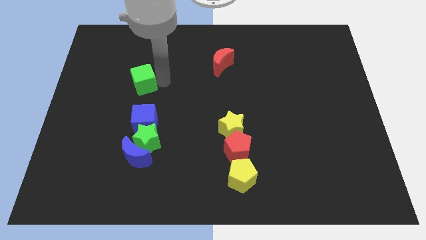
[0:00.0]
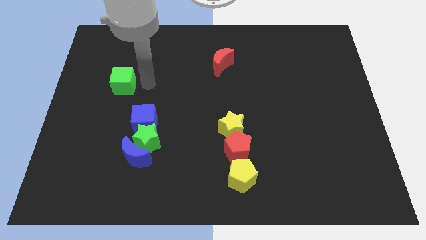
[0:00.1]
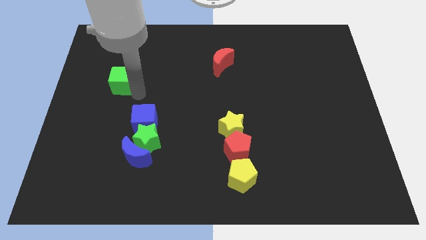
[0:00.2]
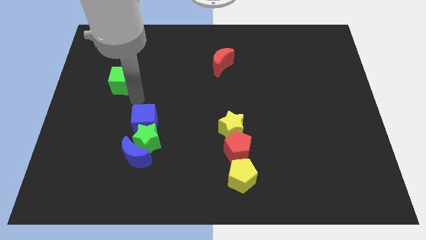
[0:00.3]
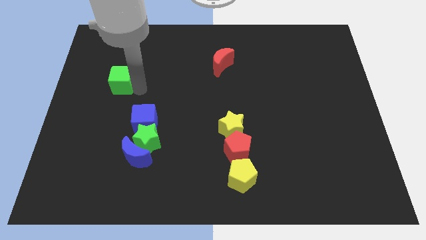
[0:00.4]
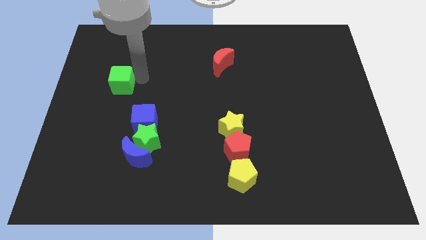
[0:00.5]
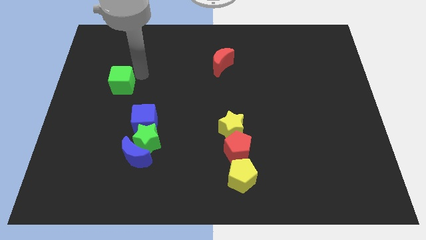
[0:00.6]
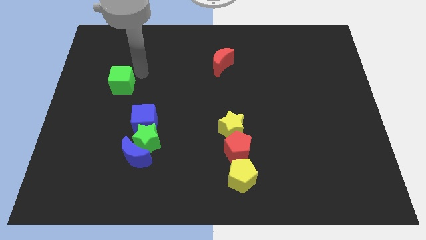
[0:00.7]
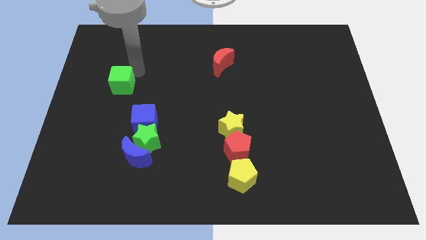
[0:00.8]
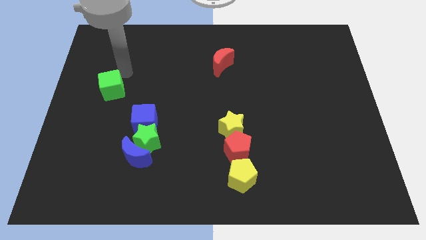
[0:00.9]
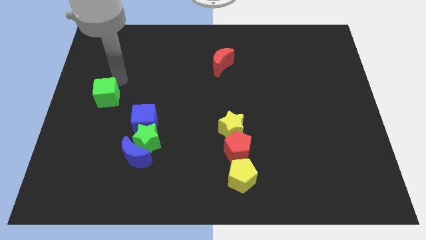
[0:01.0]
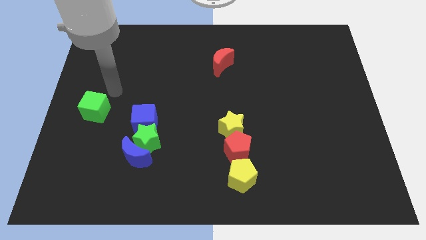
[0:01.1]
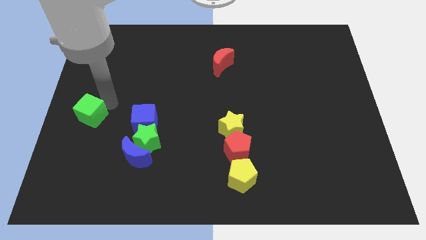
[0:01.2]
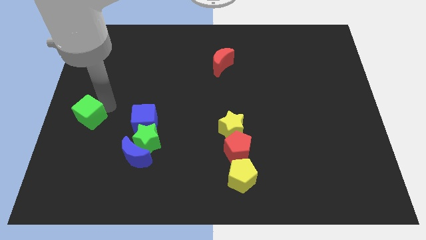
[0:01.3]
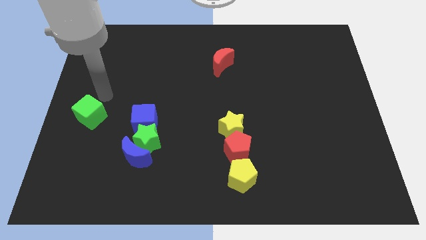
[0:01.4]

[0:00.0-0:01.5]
push the green cube to the center left of the board

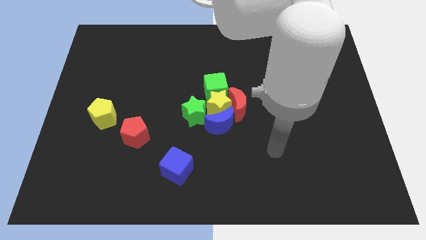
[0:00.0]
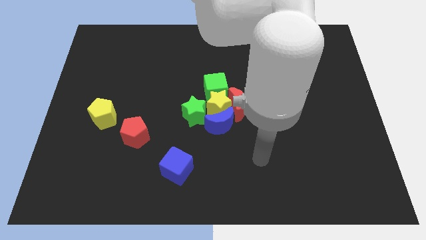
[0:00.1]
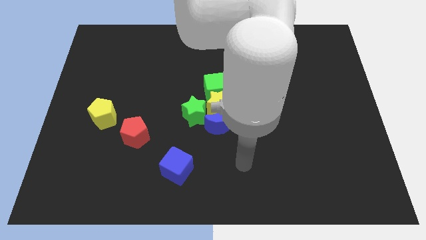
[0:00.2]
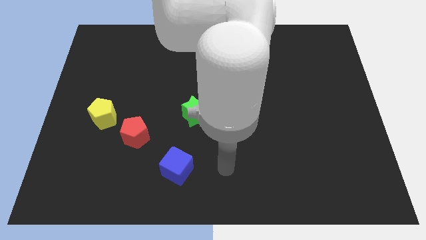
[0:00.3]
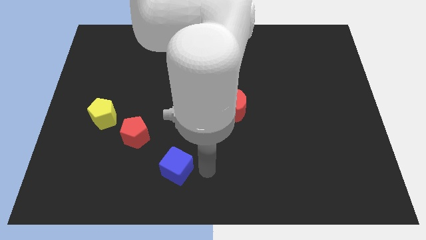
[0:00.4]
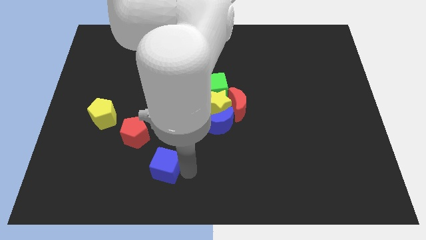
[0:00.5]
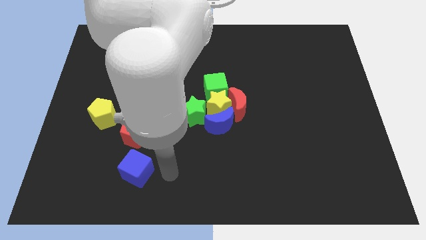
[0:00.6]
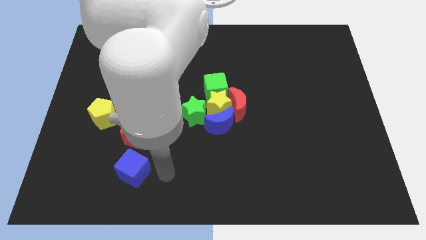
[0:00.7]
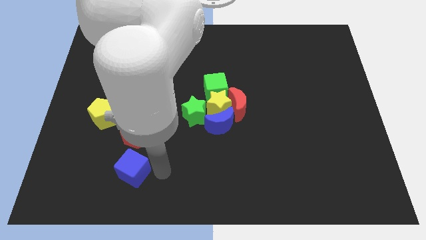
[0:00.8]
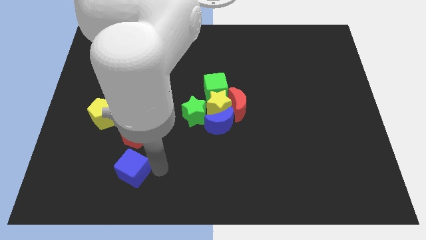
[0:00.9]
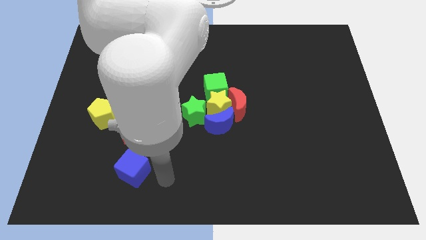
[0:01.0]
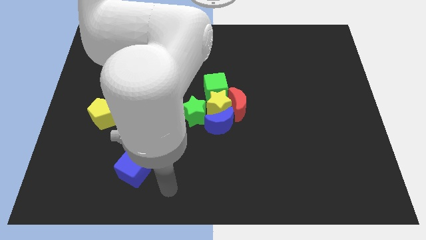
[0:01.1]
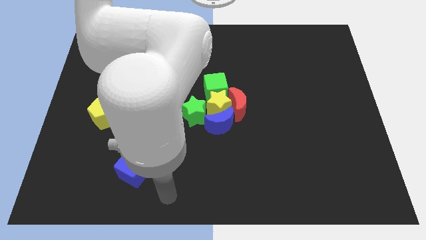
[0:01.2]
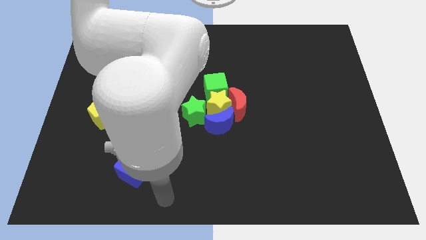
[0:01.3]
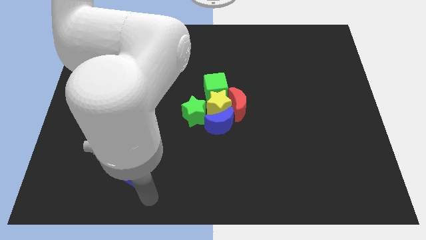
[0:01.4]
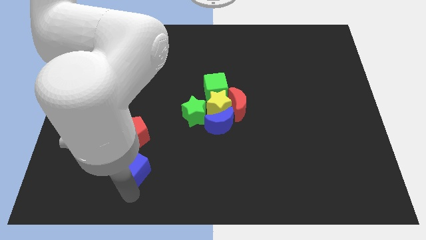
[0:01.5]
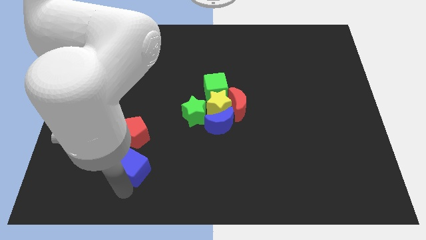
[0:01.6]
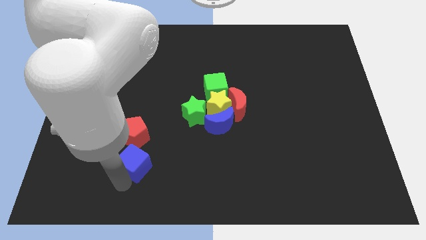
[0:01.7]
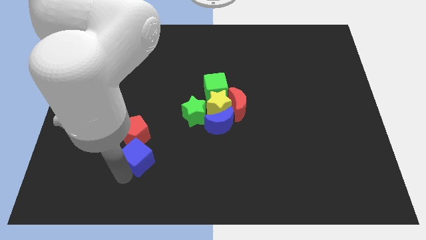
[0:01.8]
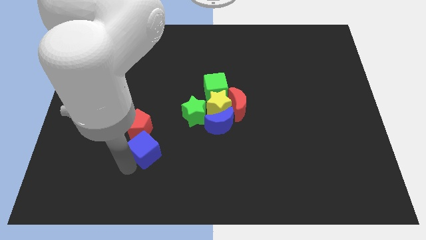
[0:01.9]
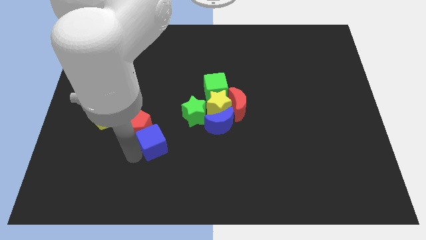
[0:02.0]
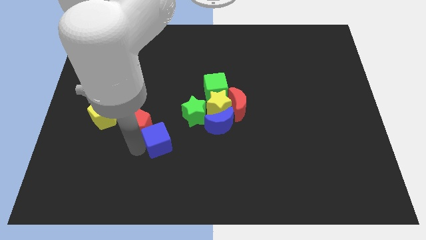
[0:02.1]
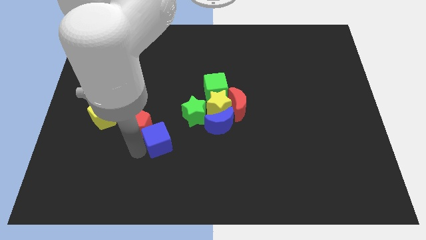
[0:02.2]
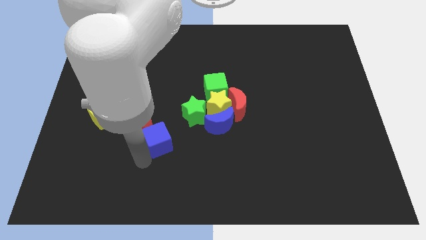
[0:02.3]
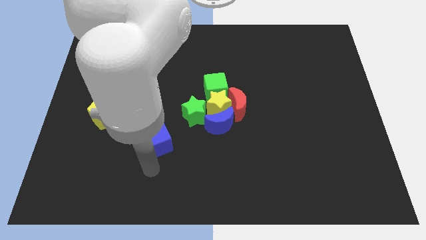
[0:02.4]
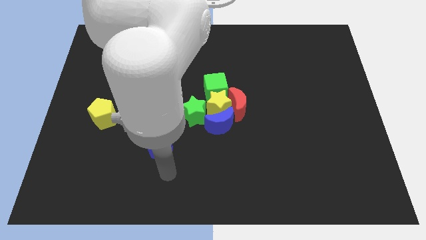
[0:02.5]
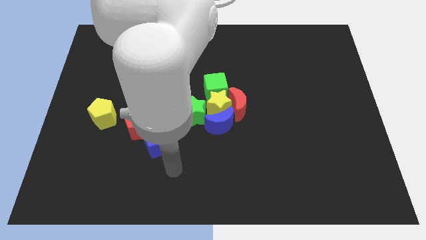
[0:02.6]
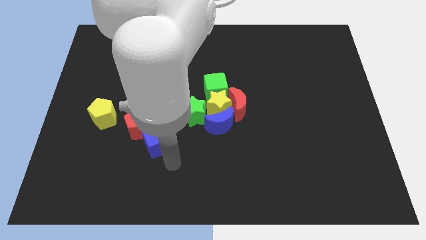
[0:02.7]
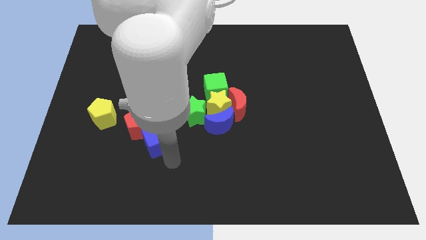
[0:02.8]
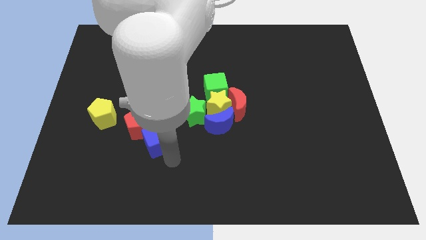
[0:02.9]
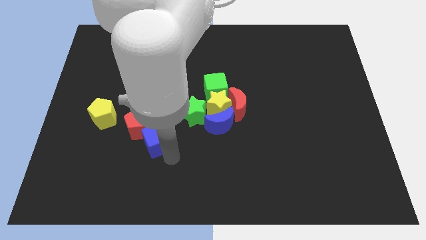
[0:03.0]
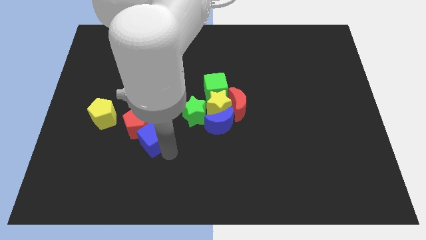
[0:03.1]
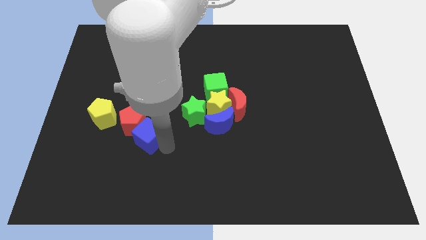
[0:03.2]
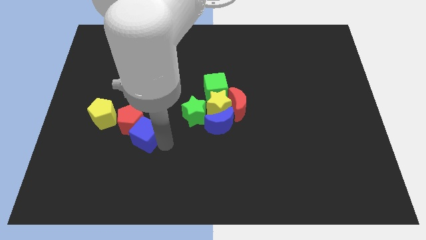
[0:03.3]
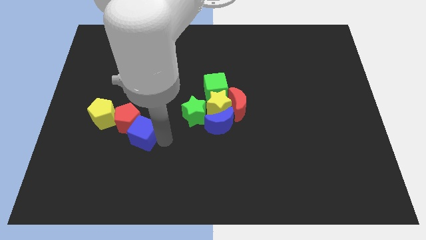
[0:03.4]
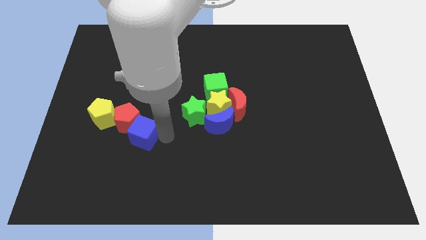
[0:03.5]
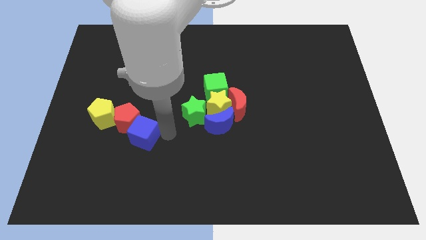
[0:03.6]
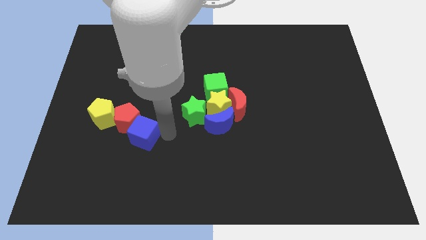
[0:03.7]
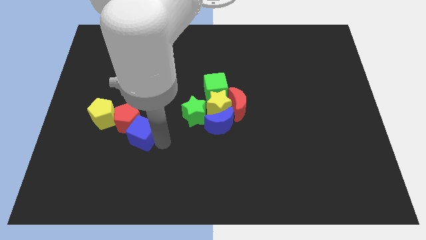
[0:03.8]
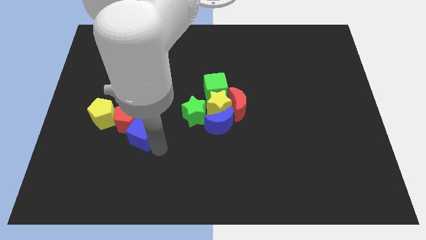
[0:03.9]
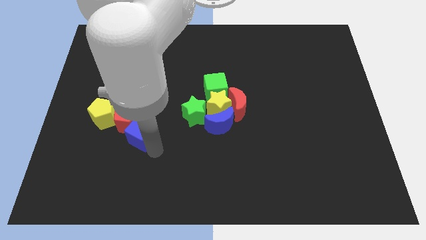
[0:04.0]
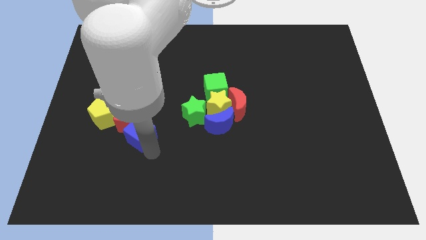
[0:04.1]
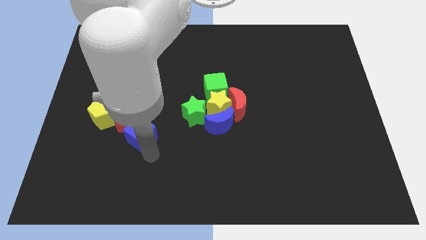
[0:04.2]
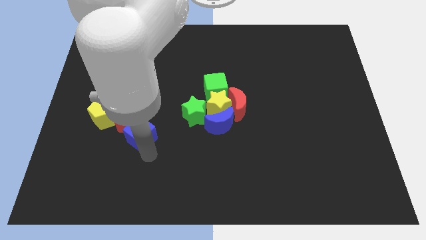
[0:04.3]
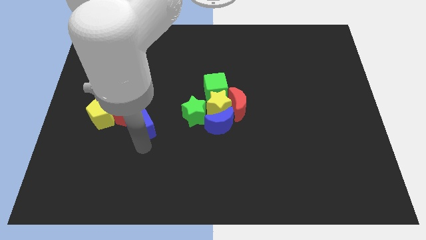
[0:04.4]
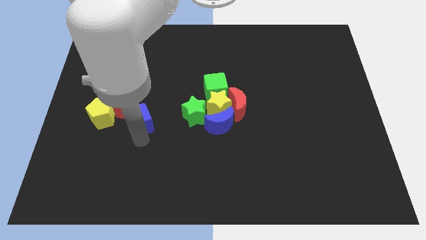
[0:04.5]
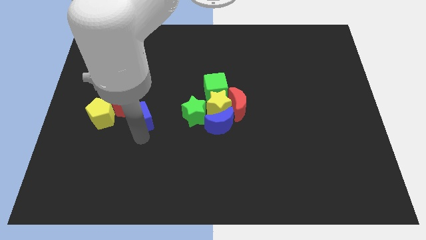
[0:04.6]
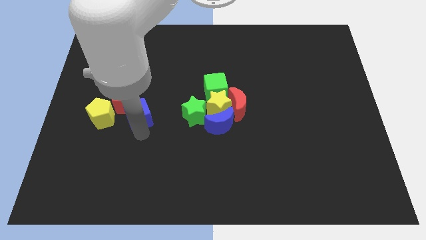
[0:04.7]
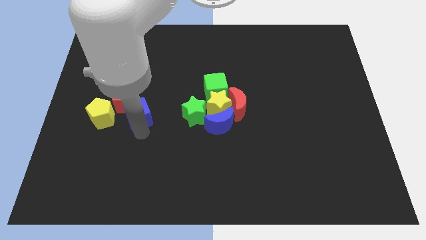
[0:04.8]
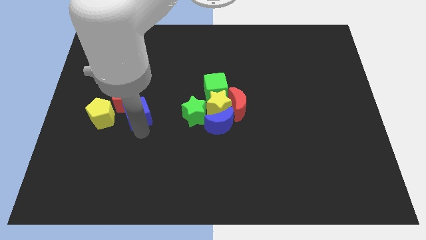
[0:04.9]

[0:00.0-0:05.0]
drag the blue cube and place it close to the red pentagon

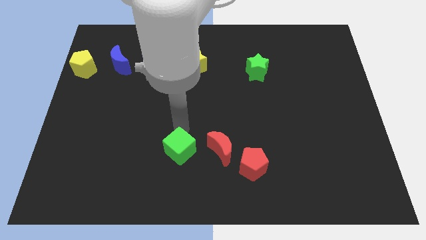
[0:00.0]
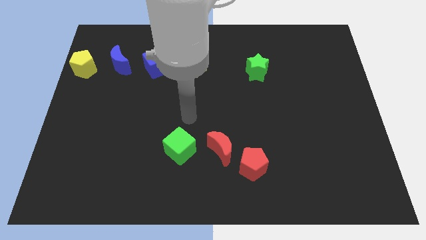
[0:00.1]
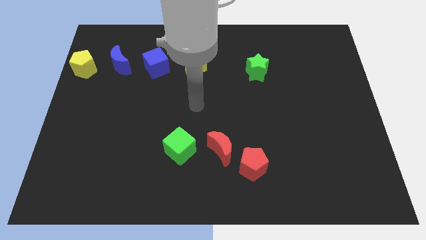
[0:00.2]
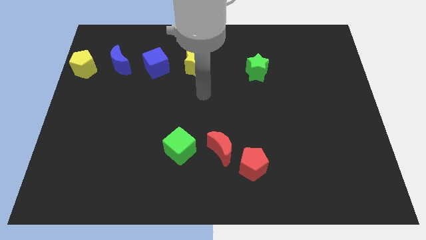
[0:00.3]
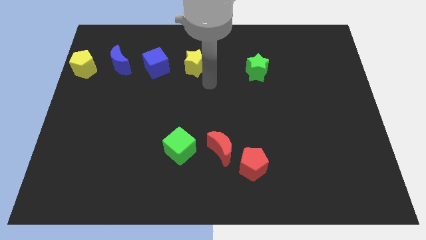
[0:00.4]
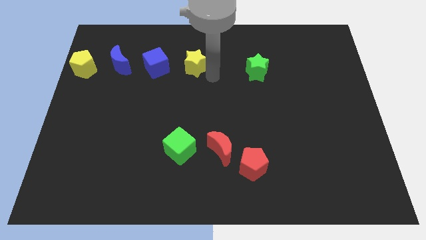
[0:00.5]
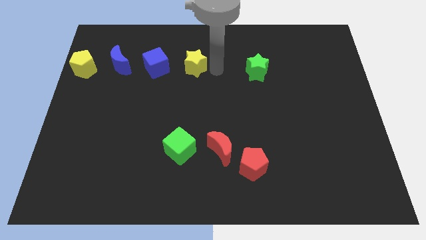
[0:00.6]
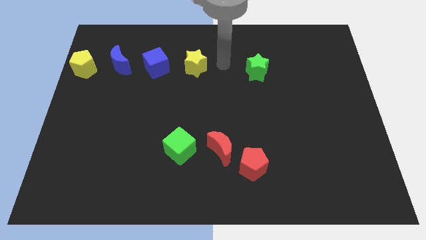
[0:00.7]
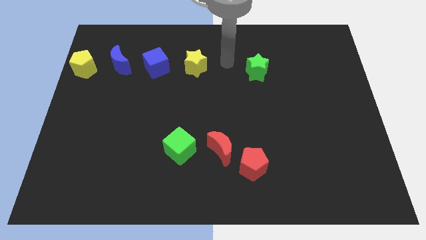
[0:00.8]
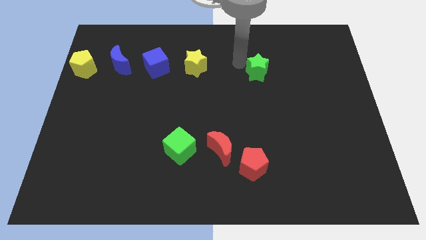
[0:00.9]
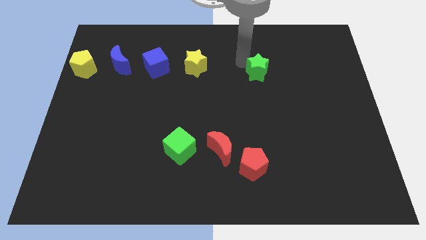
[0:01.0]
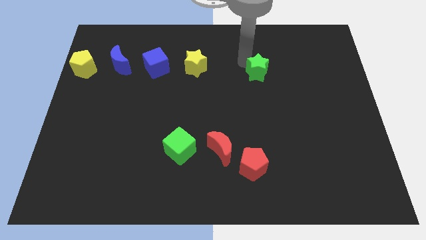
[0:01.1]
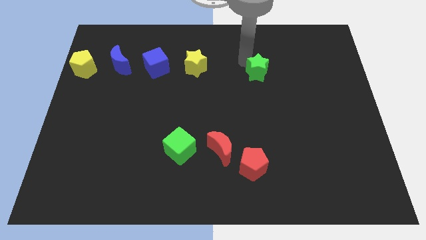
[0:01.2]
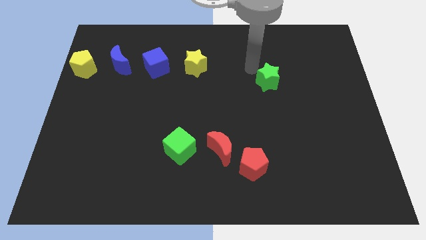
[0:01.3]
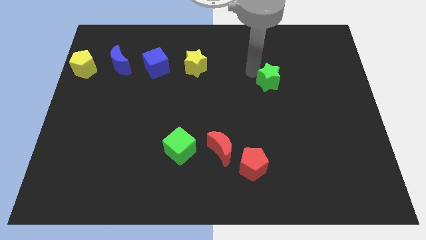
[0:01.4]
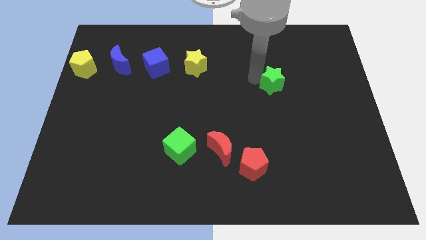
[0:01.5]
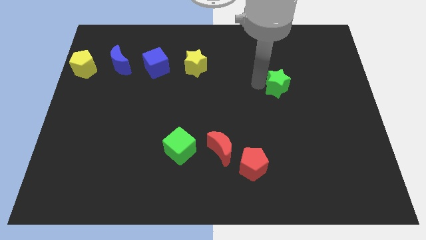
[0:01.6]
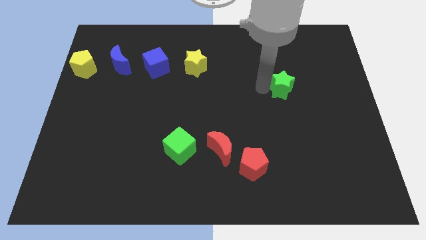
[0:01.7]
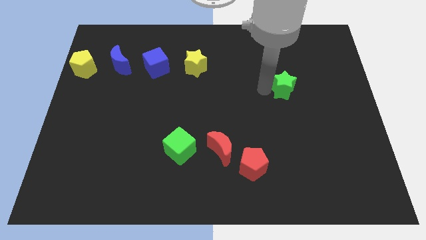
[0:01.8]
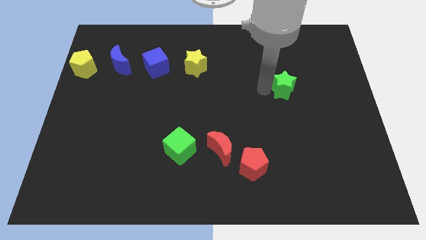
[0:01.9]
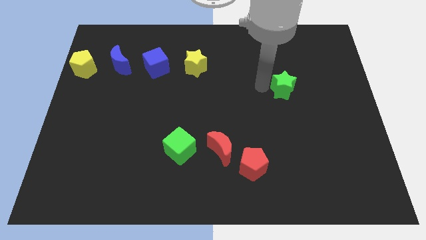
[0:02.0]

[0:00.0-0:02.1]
move the green star towards right center of the board

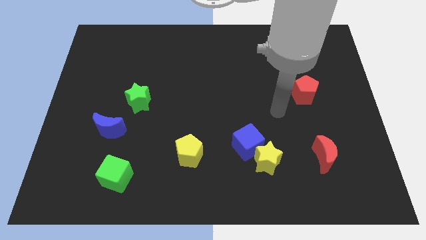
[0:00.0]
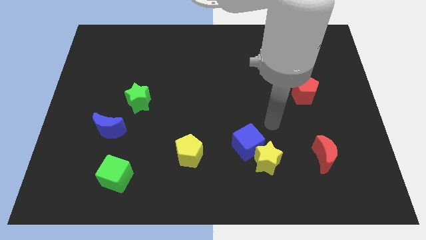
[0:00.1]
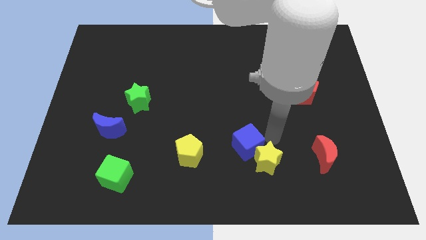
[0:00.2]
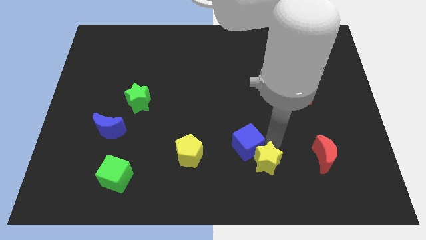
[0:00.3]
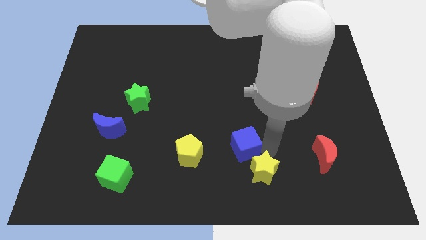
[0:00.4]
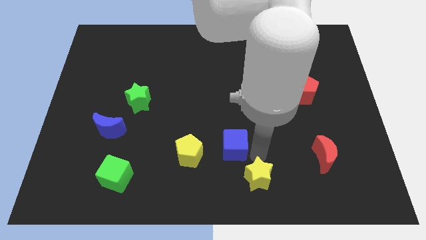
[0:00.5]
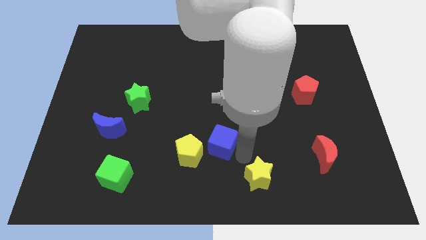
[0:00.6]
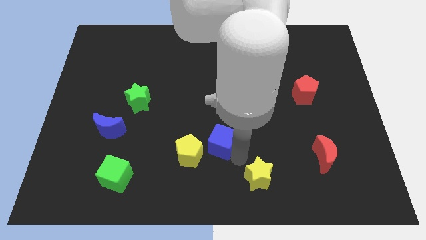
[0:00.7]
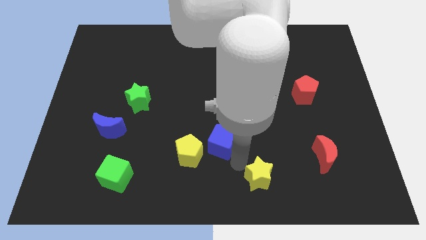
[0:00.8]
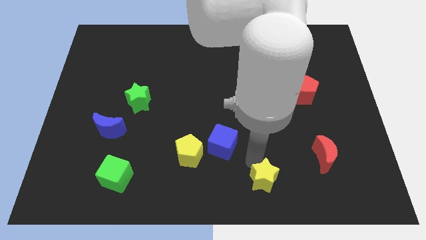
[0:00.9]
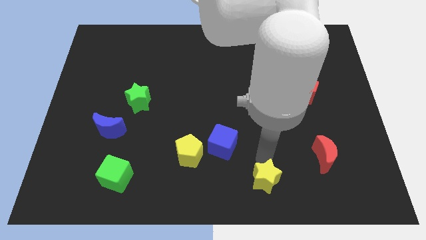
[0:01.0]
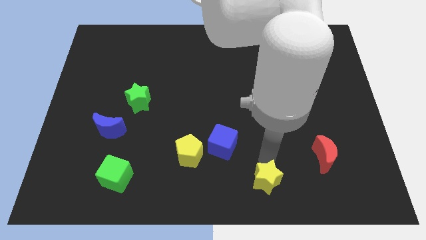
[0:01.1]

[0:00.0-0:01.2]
separate the yellow star and blue cube
